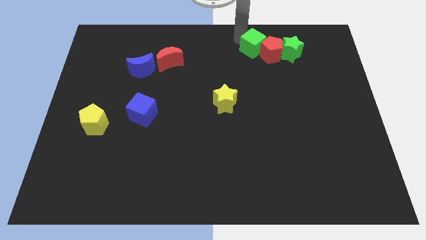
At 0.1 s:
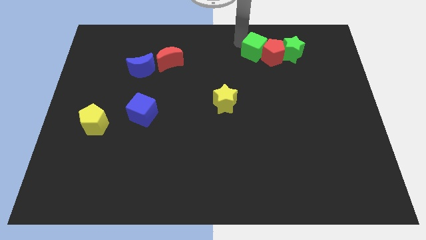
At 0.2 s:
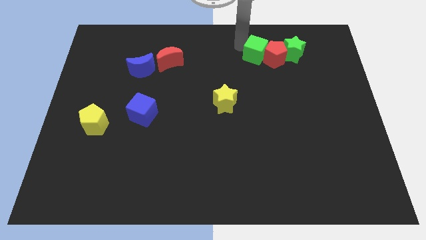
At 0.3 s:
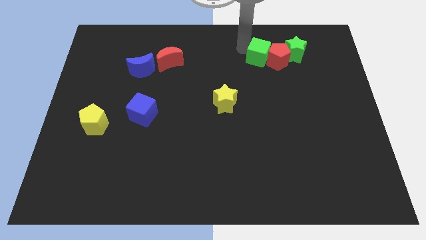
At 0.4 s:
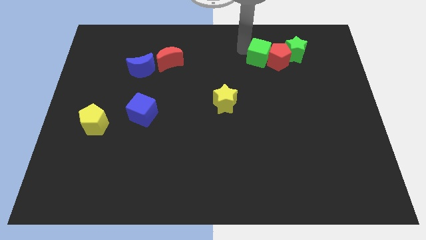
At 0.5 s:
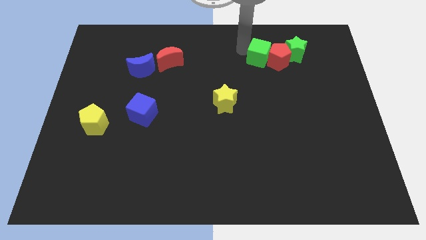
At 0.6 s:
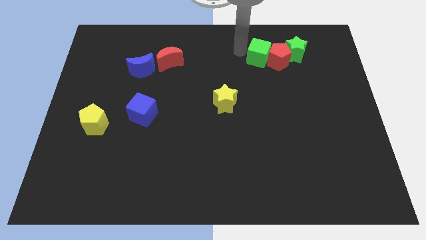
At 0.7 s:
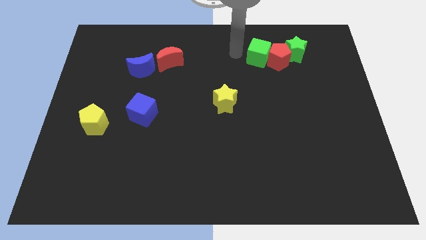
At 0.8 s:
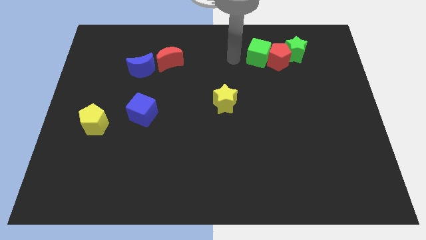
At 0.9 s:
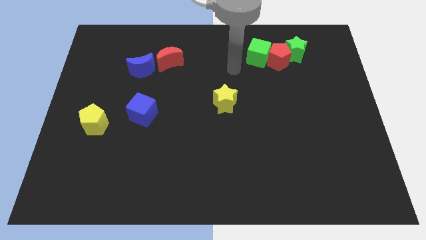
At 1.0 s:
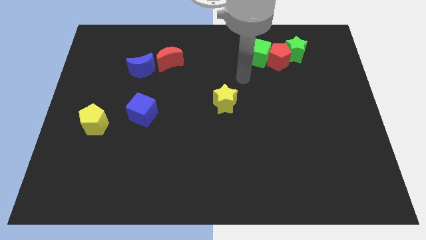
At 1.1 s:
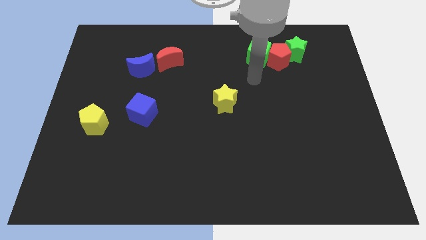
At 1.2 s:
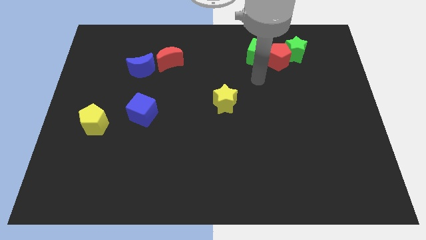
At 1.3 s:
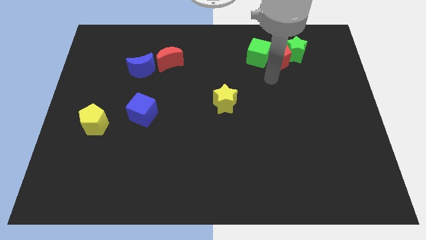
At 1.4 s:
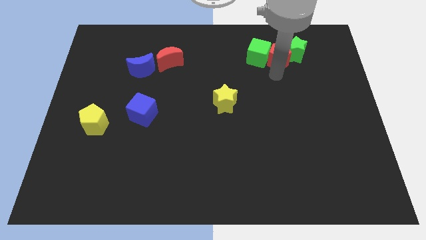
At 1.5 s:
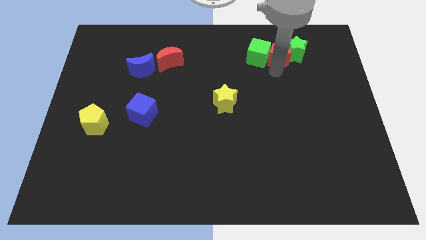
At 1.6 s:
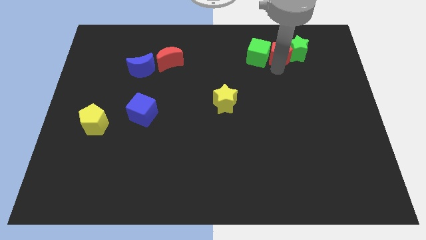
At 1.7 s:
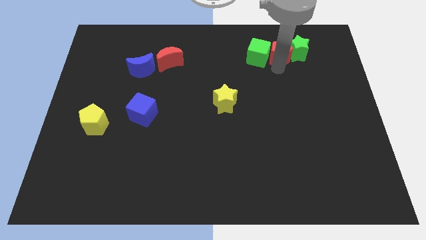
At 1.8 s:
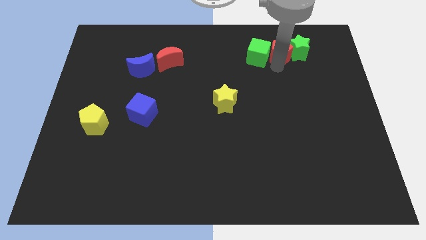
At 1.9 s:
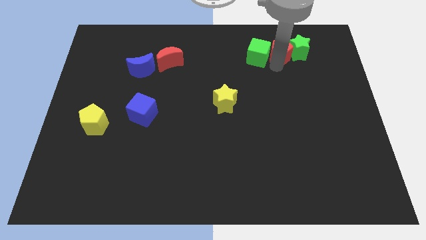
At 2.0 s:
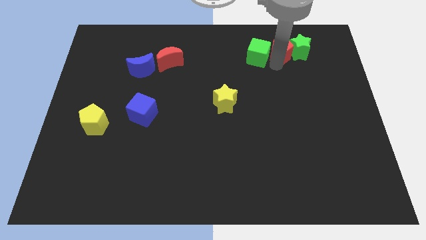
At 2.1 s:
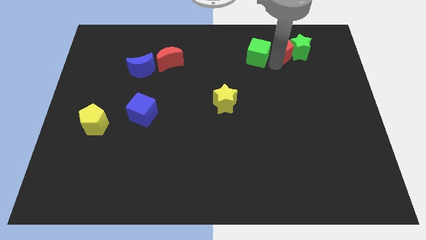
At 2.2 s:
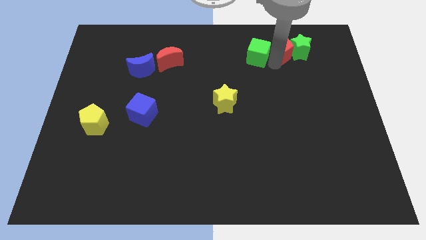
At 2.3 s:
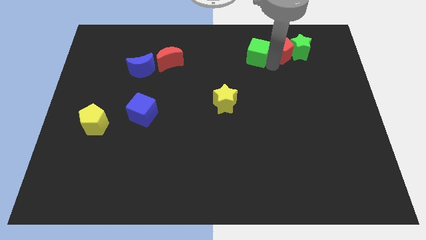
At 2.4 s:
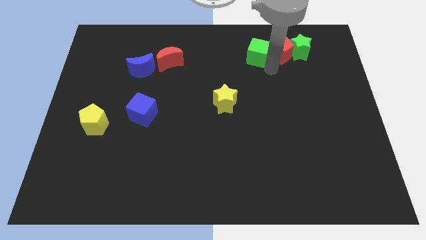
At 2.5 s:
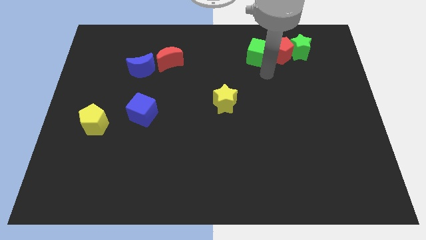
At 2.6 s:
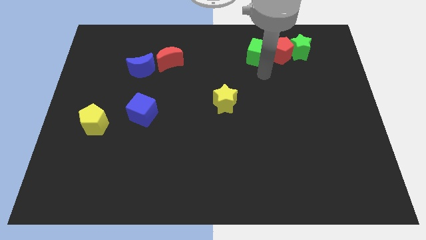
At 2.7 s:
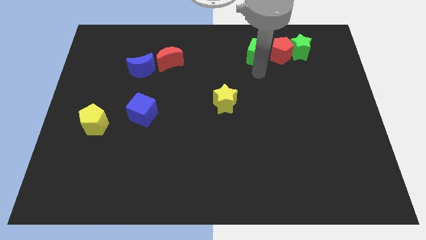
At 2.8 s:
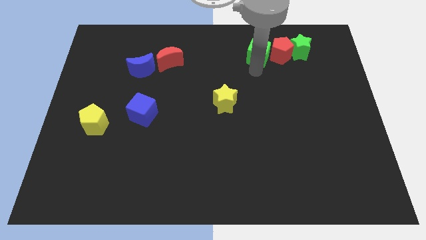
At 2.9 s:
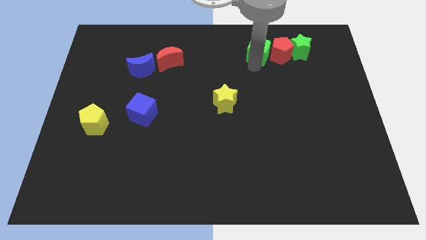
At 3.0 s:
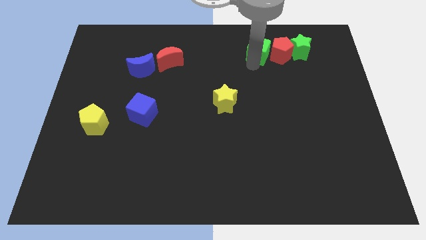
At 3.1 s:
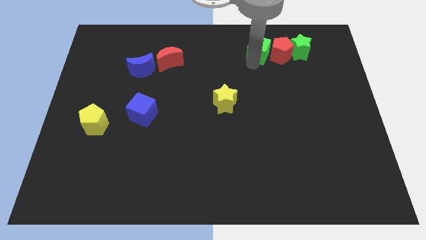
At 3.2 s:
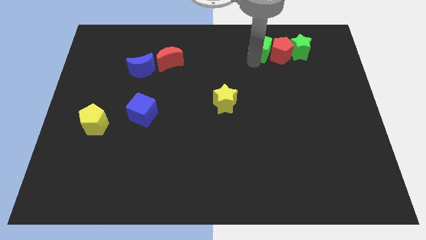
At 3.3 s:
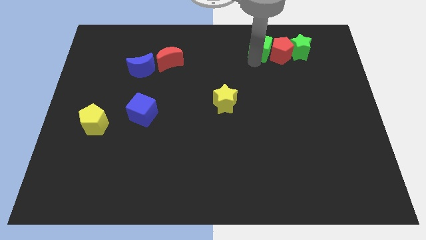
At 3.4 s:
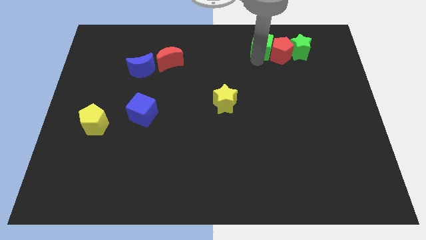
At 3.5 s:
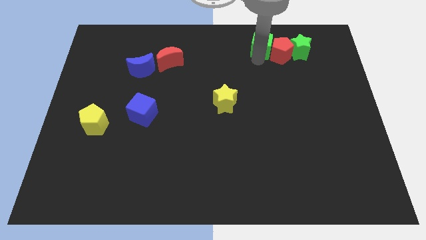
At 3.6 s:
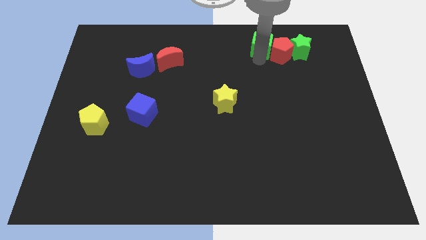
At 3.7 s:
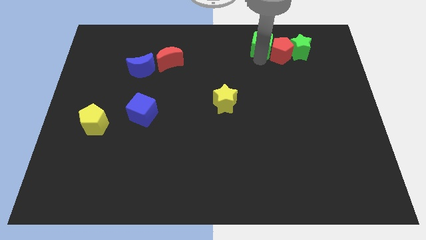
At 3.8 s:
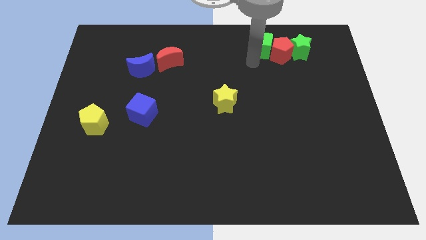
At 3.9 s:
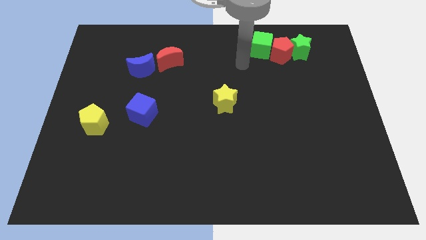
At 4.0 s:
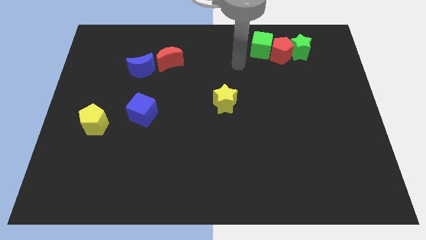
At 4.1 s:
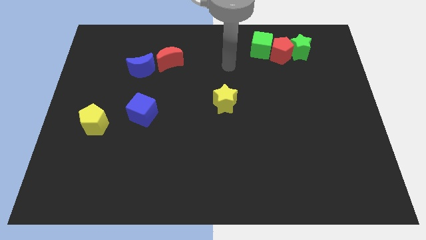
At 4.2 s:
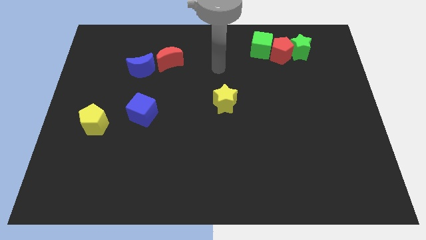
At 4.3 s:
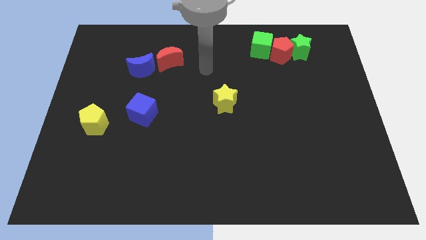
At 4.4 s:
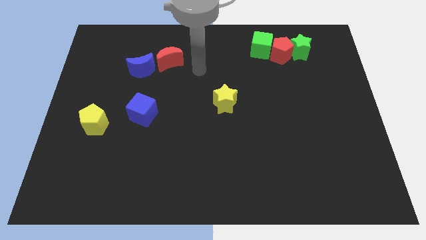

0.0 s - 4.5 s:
slightly move the green cube and red pentagon up

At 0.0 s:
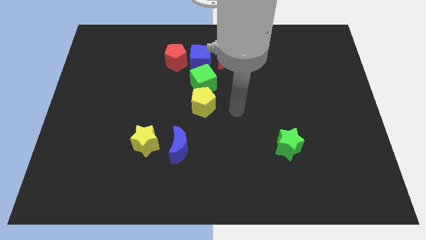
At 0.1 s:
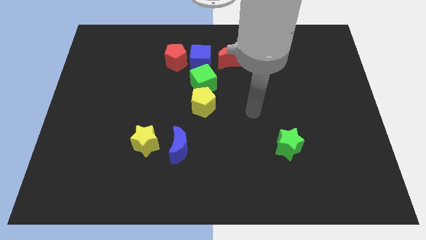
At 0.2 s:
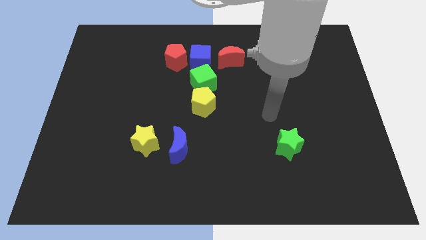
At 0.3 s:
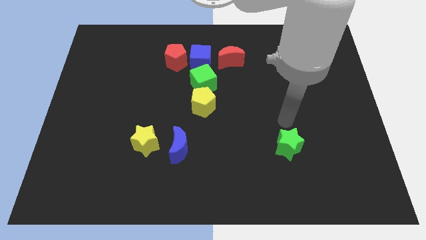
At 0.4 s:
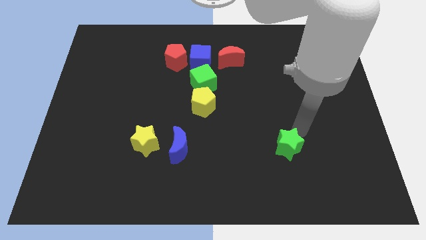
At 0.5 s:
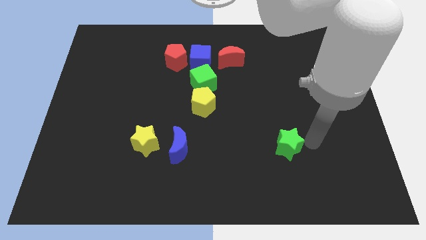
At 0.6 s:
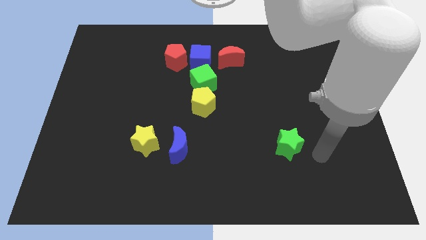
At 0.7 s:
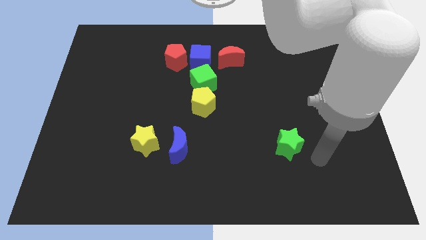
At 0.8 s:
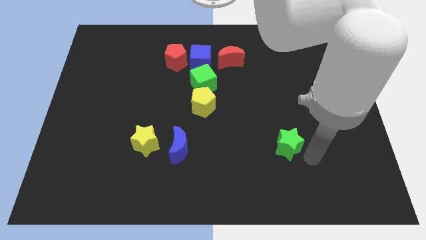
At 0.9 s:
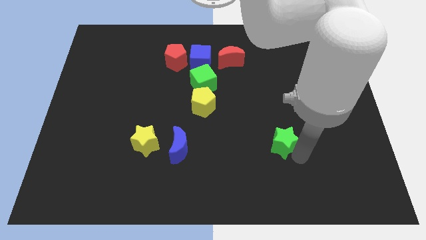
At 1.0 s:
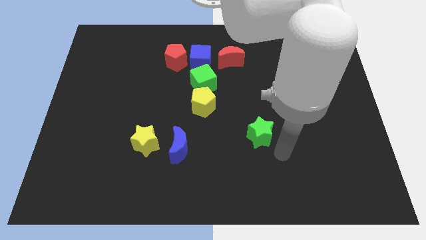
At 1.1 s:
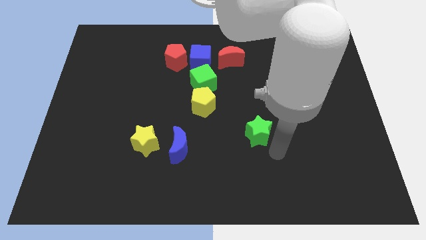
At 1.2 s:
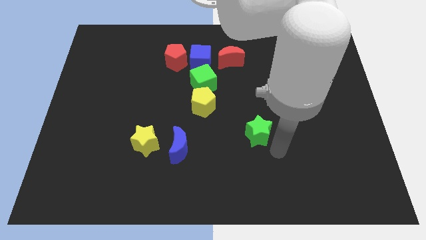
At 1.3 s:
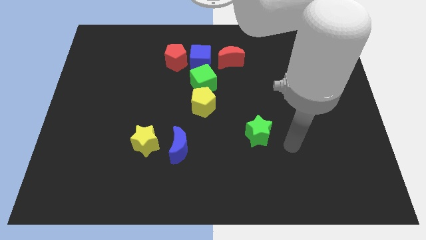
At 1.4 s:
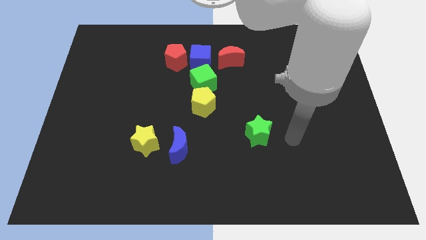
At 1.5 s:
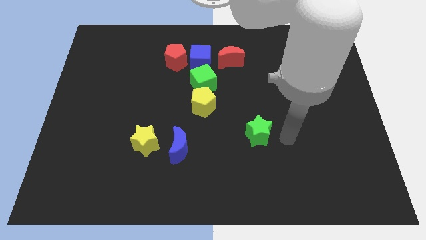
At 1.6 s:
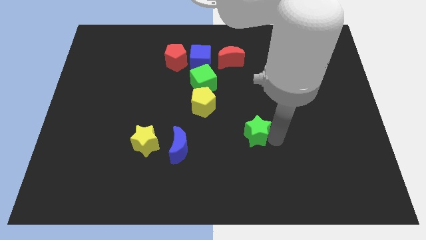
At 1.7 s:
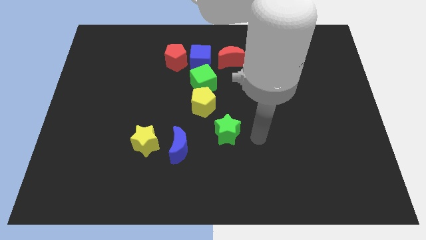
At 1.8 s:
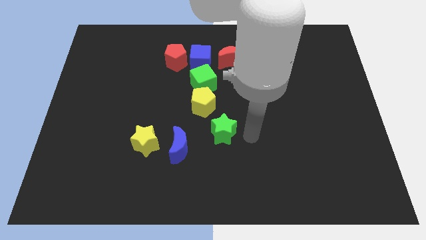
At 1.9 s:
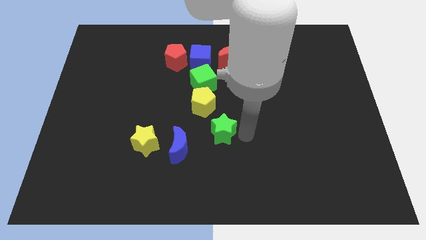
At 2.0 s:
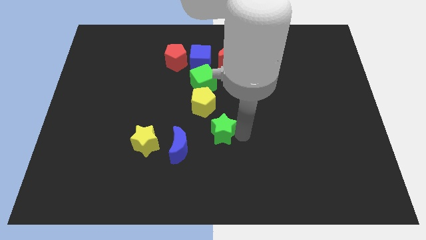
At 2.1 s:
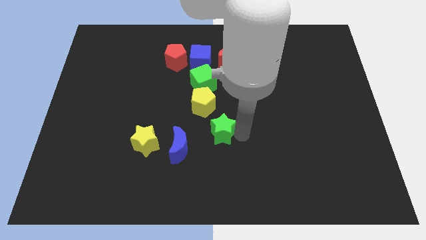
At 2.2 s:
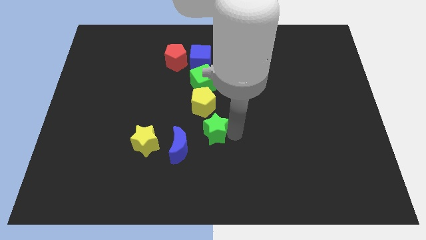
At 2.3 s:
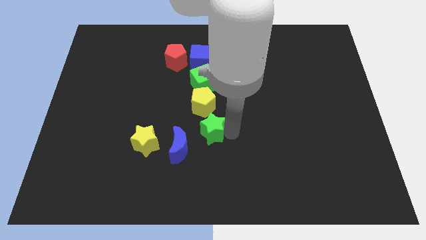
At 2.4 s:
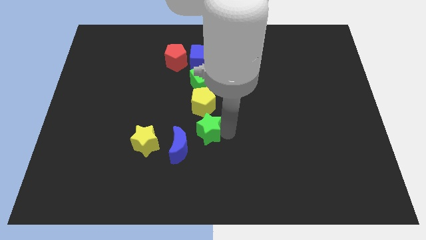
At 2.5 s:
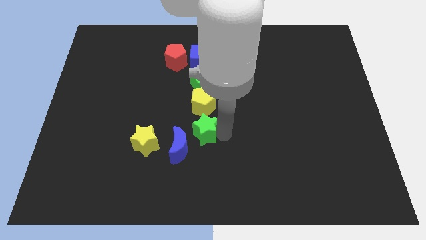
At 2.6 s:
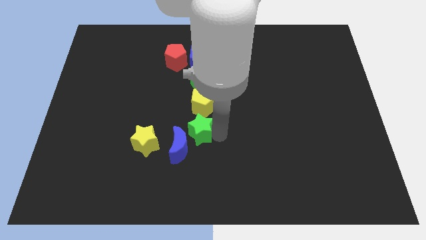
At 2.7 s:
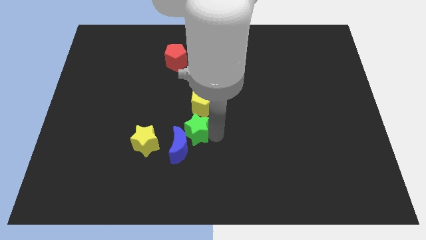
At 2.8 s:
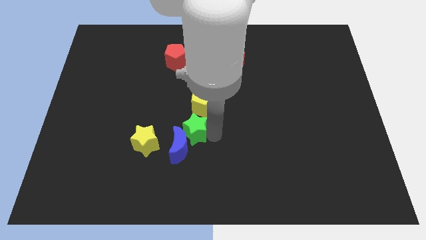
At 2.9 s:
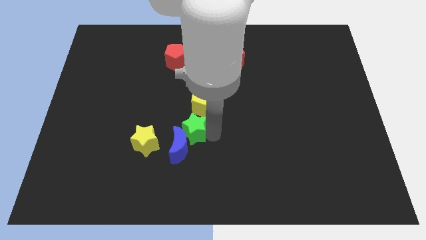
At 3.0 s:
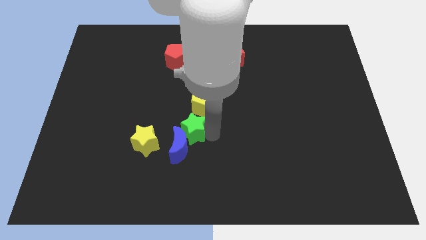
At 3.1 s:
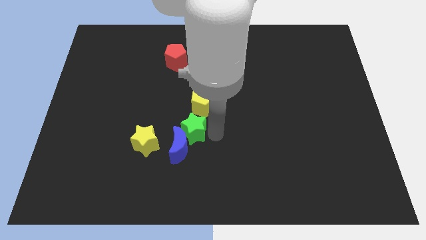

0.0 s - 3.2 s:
place the green star diagonally in between the yellow pentagon and blue crescent

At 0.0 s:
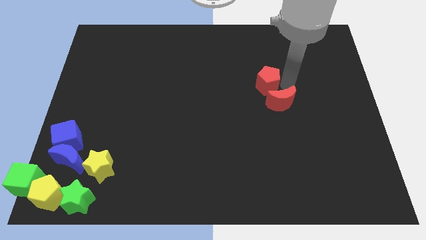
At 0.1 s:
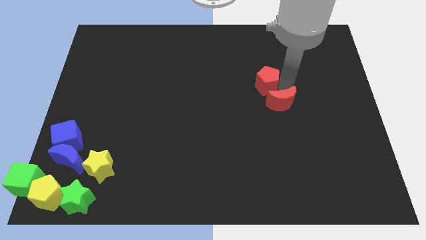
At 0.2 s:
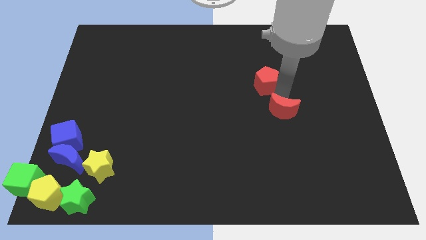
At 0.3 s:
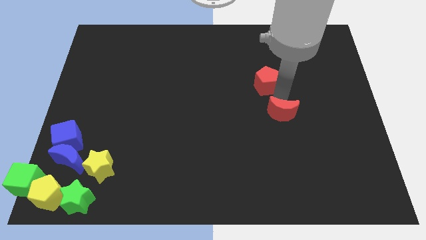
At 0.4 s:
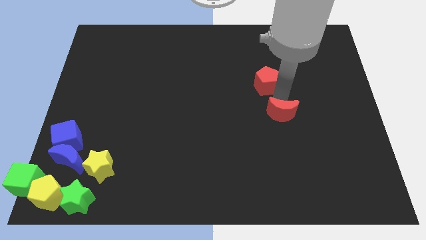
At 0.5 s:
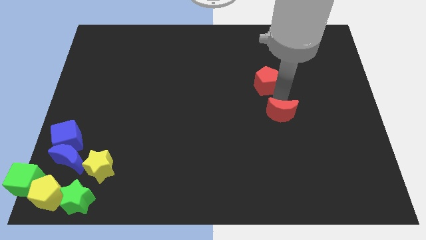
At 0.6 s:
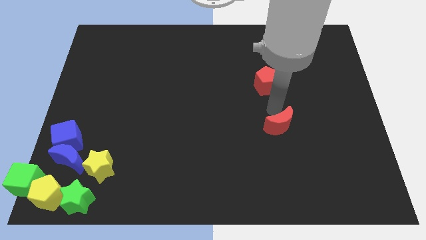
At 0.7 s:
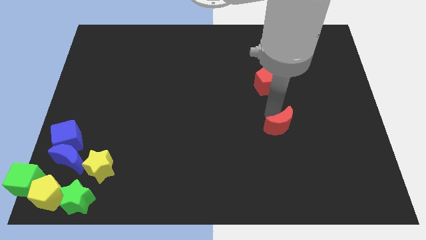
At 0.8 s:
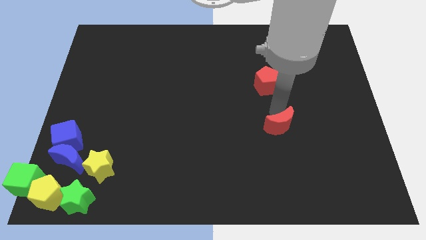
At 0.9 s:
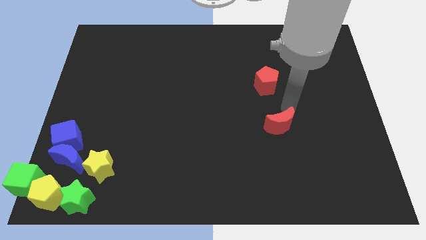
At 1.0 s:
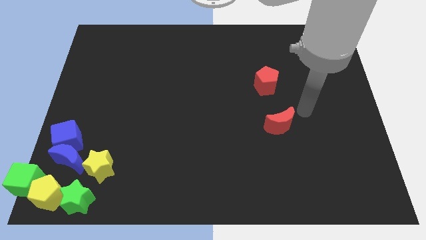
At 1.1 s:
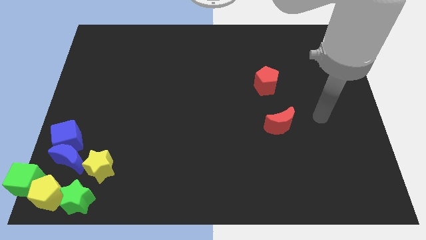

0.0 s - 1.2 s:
move red moon away from the red pentagon
